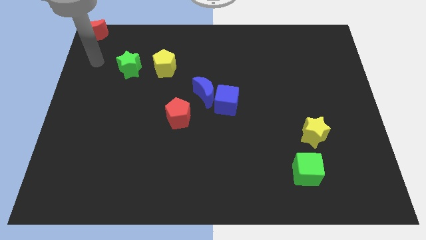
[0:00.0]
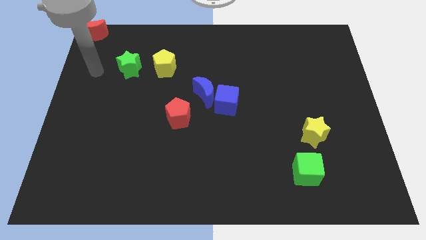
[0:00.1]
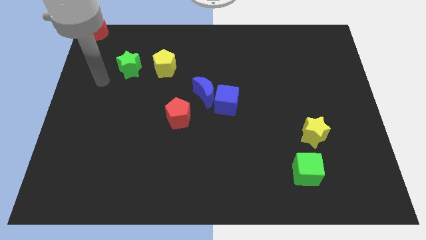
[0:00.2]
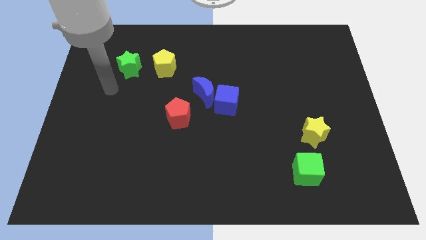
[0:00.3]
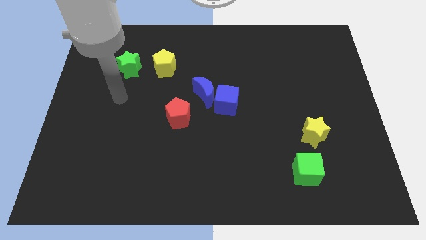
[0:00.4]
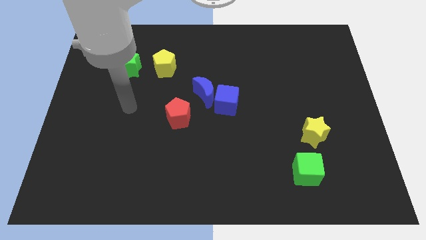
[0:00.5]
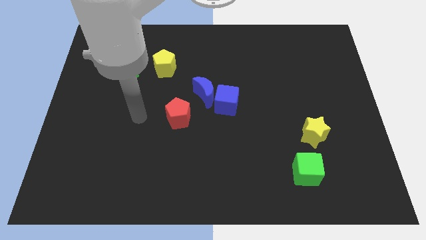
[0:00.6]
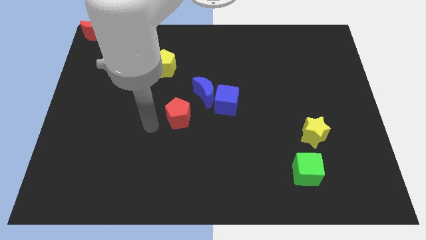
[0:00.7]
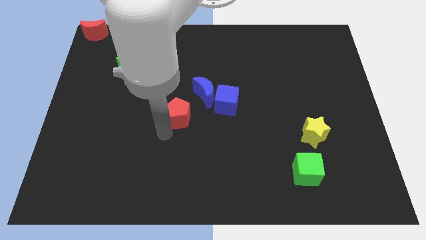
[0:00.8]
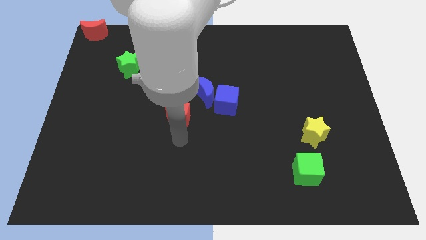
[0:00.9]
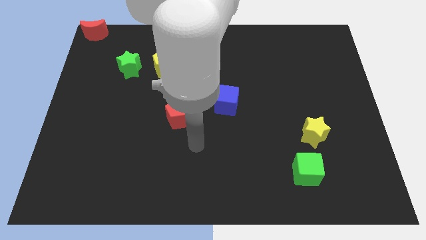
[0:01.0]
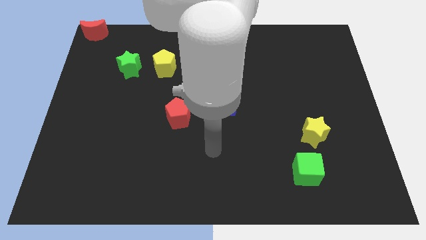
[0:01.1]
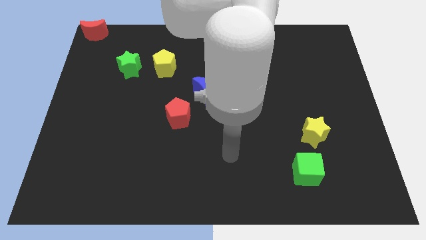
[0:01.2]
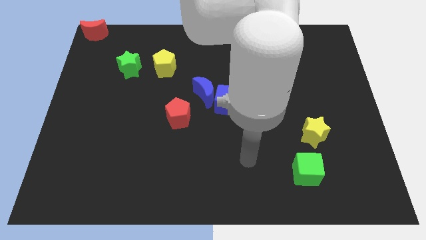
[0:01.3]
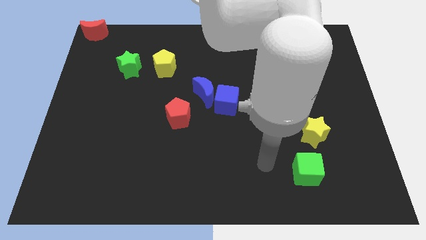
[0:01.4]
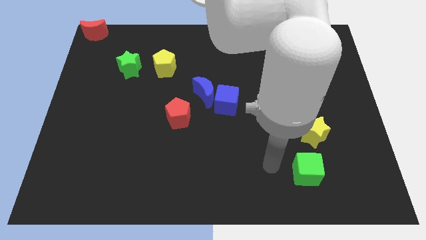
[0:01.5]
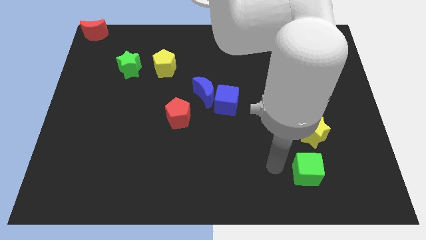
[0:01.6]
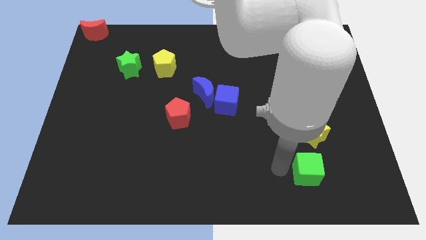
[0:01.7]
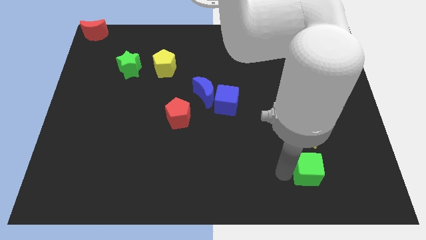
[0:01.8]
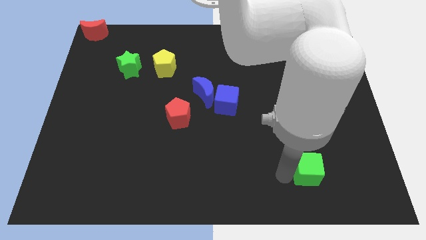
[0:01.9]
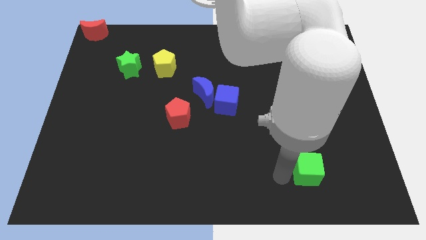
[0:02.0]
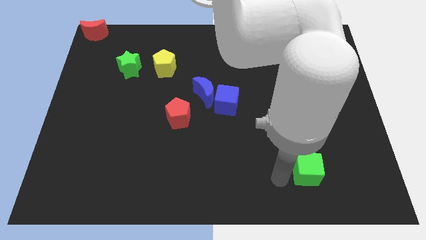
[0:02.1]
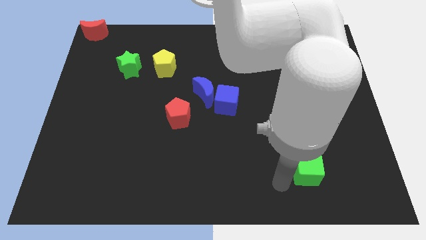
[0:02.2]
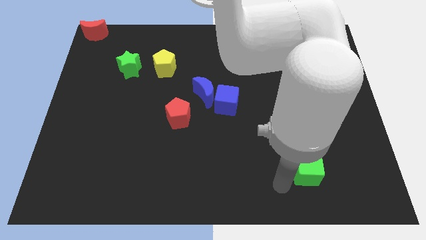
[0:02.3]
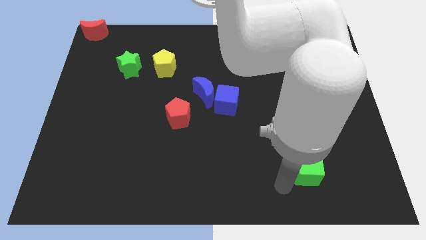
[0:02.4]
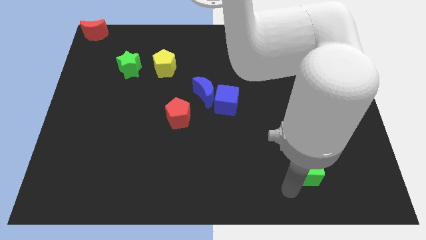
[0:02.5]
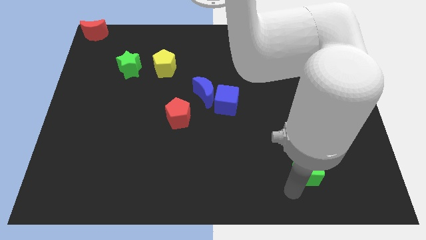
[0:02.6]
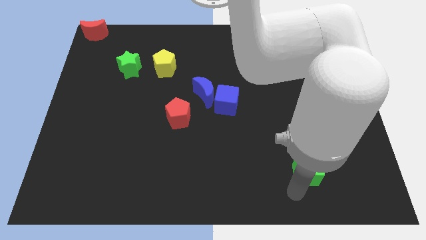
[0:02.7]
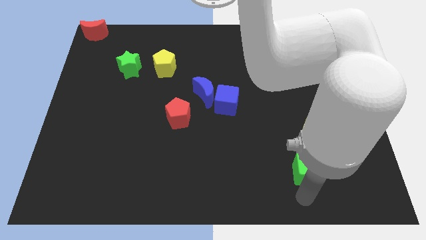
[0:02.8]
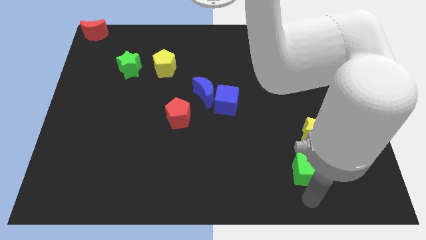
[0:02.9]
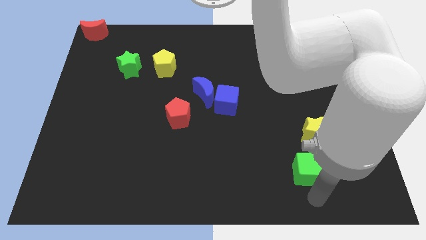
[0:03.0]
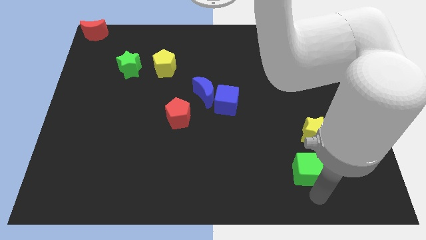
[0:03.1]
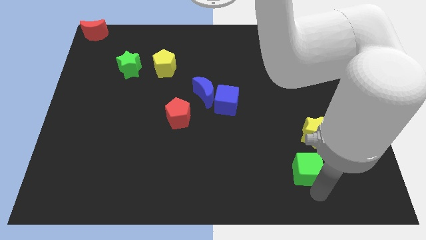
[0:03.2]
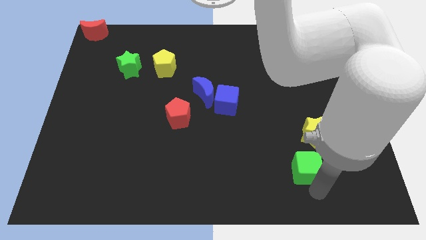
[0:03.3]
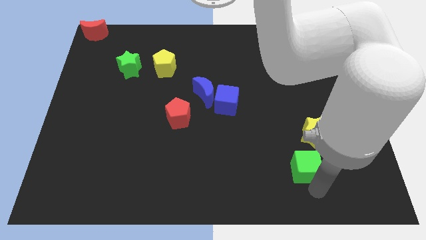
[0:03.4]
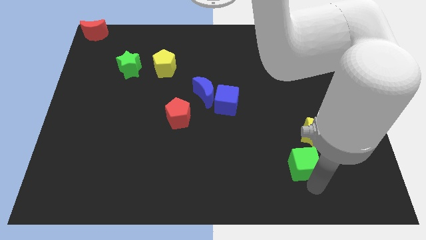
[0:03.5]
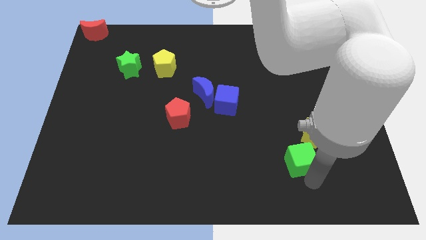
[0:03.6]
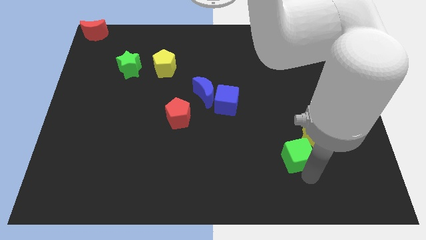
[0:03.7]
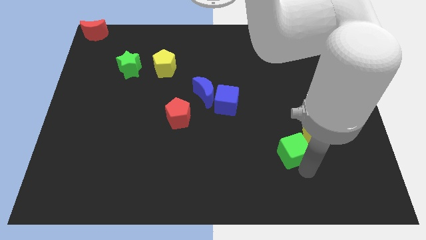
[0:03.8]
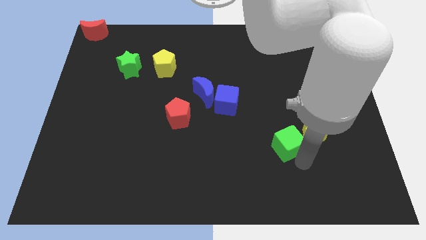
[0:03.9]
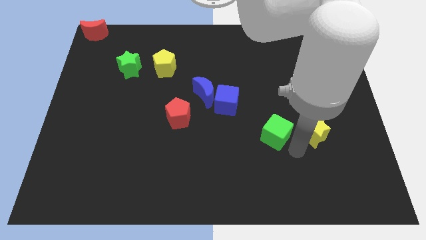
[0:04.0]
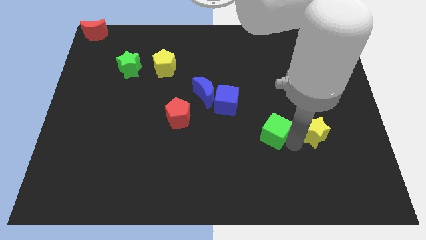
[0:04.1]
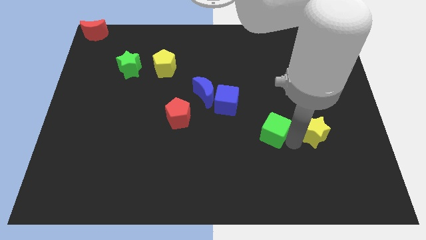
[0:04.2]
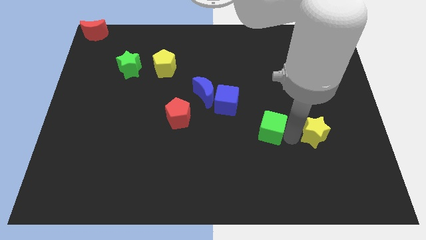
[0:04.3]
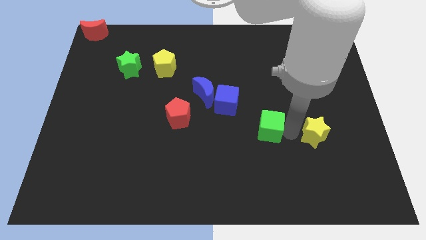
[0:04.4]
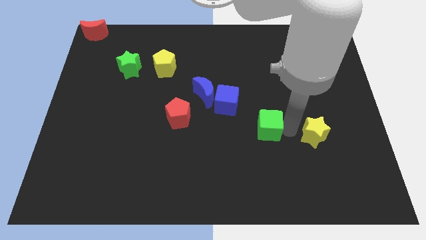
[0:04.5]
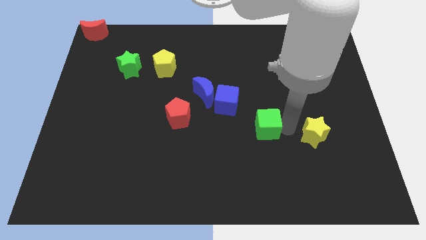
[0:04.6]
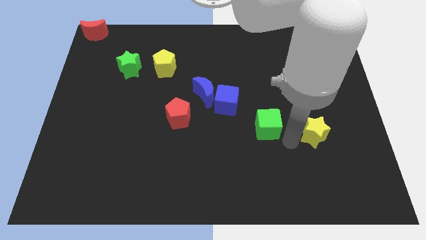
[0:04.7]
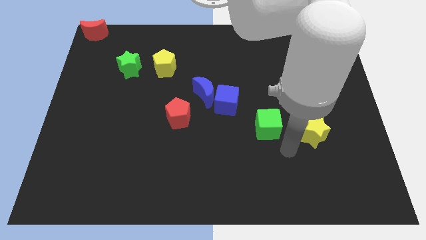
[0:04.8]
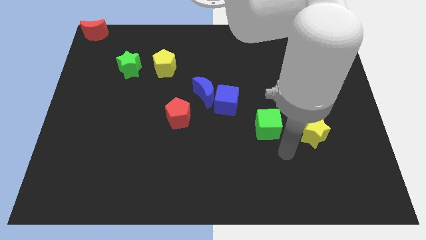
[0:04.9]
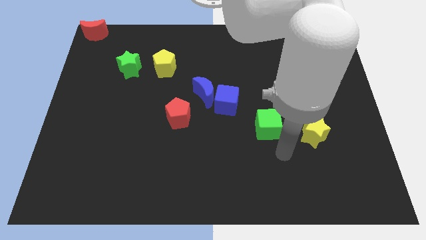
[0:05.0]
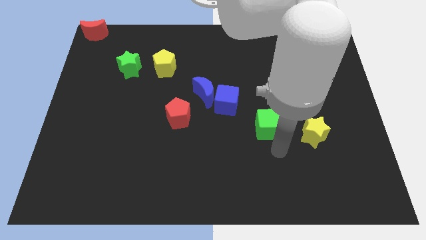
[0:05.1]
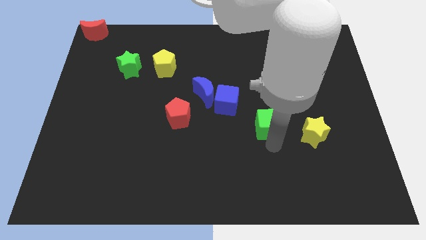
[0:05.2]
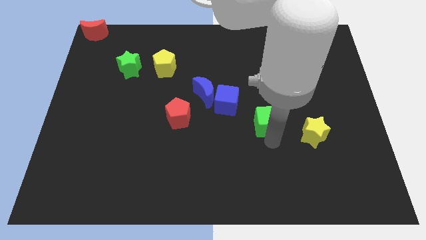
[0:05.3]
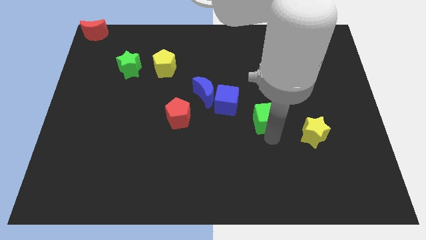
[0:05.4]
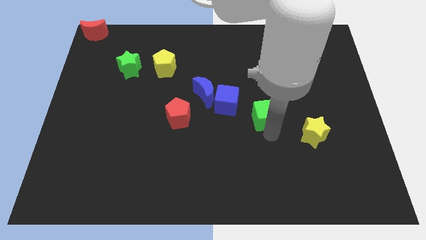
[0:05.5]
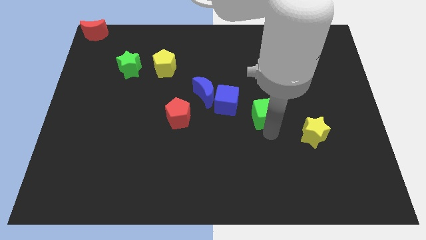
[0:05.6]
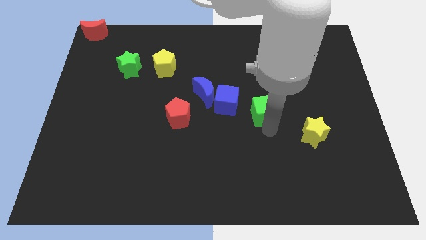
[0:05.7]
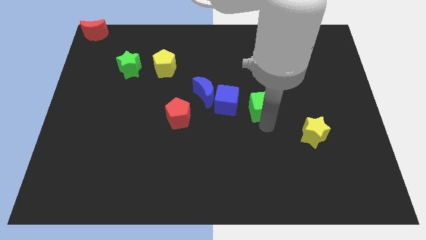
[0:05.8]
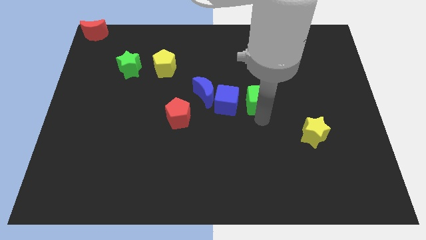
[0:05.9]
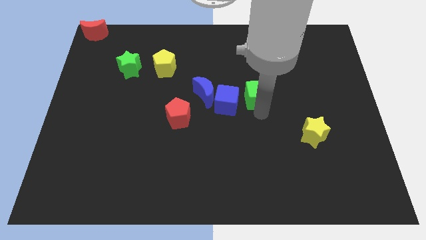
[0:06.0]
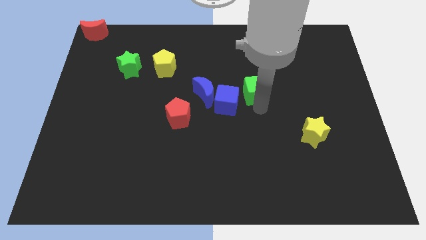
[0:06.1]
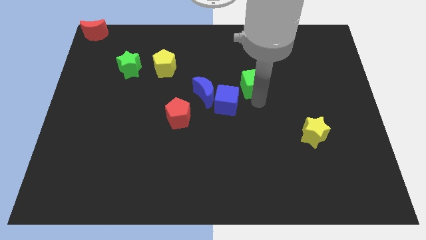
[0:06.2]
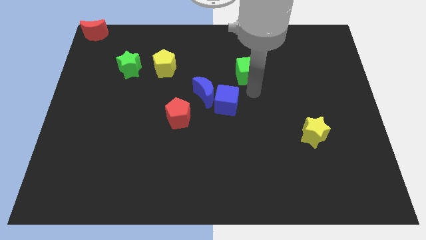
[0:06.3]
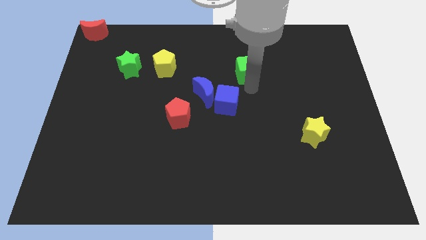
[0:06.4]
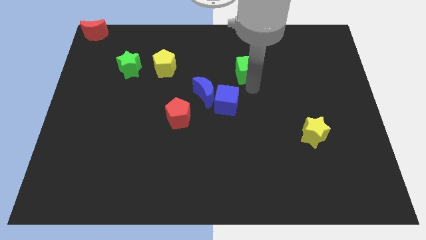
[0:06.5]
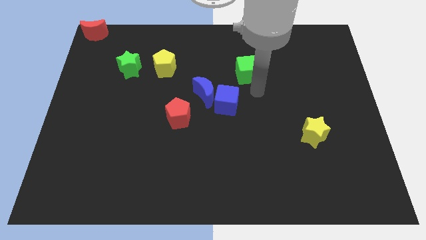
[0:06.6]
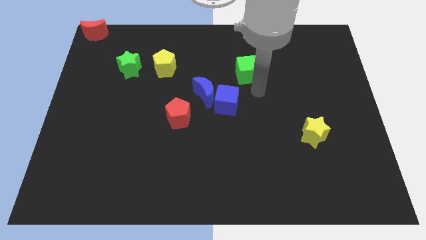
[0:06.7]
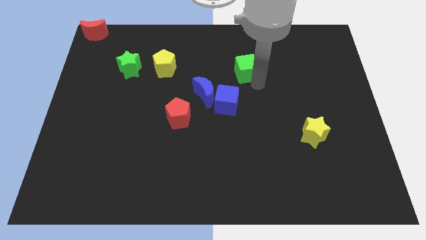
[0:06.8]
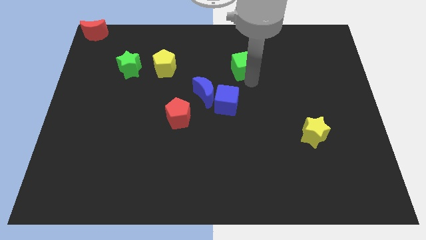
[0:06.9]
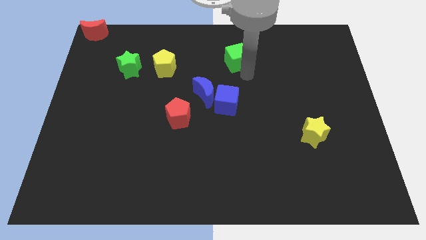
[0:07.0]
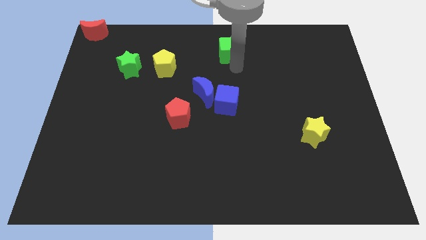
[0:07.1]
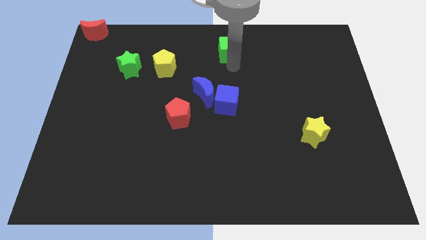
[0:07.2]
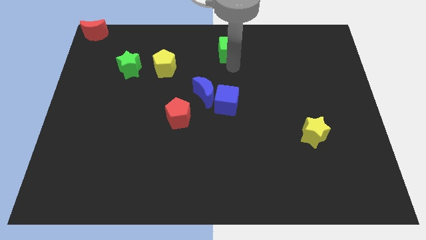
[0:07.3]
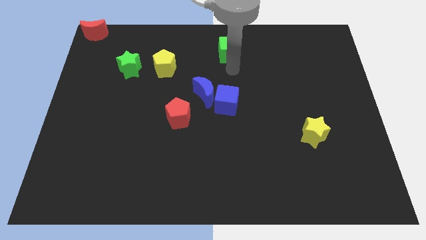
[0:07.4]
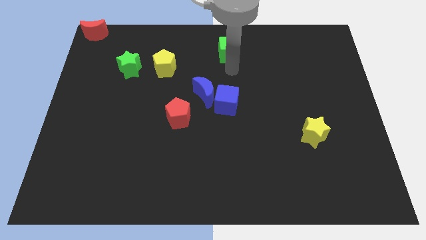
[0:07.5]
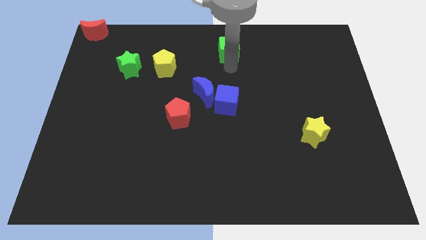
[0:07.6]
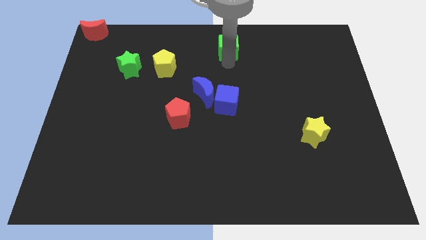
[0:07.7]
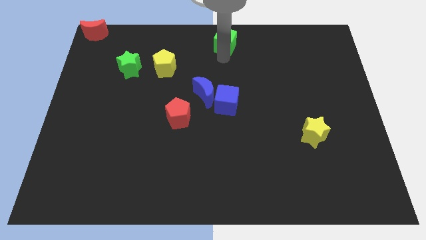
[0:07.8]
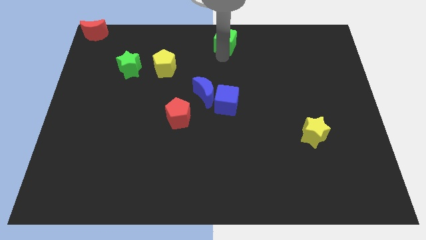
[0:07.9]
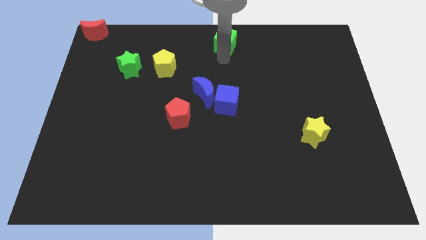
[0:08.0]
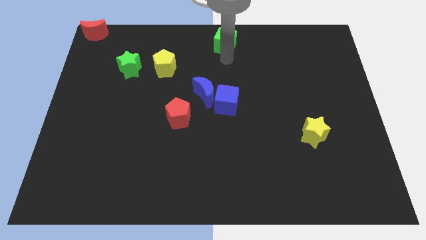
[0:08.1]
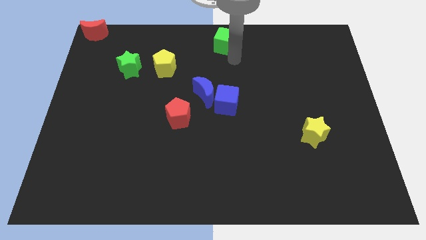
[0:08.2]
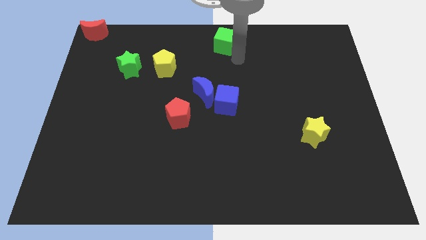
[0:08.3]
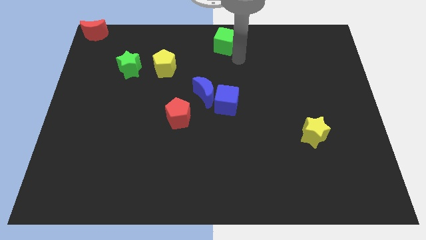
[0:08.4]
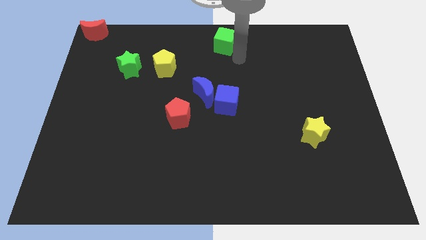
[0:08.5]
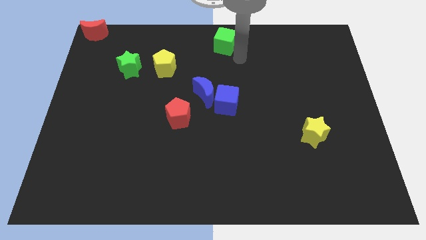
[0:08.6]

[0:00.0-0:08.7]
put the green cube above the blue cube

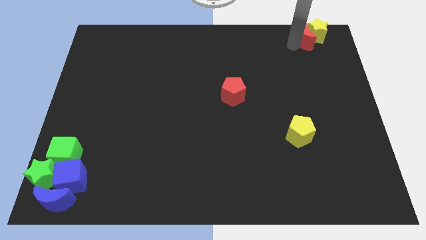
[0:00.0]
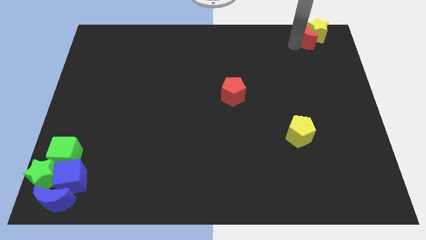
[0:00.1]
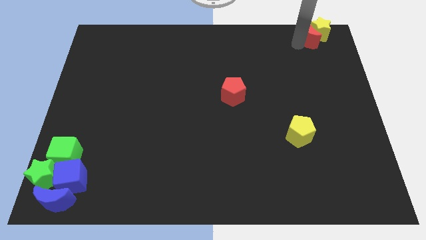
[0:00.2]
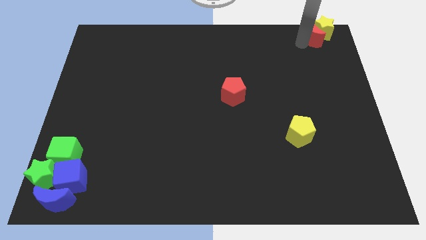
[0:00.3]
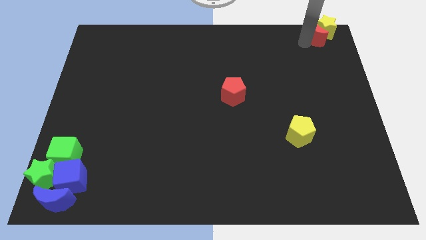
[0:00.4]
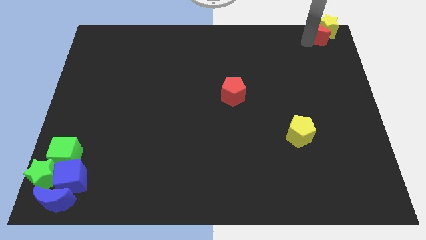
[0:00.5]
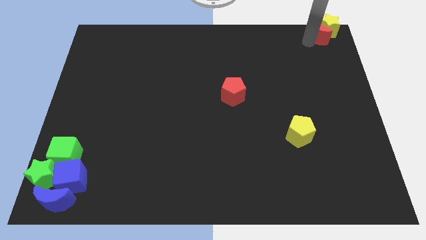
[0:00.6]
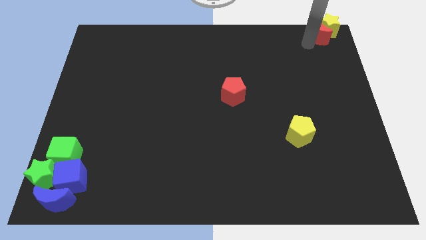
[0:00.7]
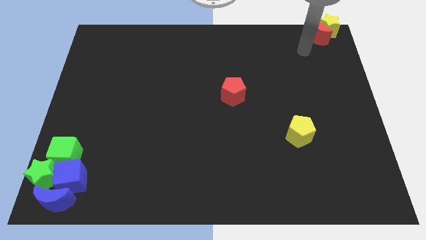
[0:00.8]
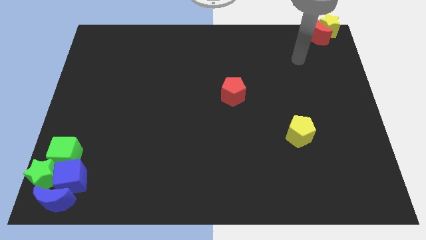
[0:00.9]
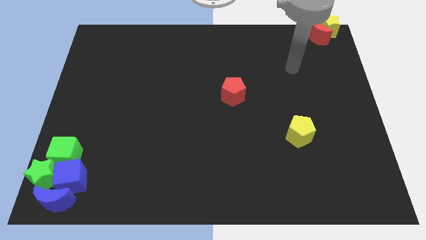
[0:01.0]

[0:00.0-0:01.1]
slide your arm away from red moon
